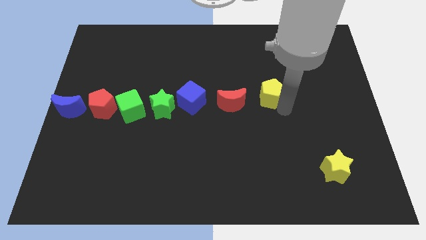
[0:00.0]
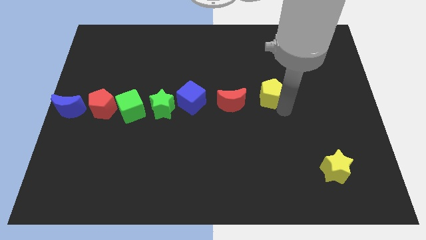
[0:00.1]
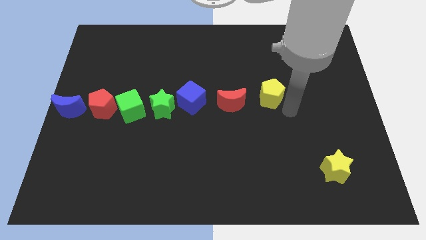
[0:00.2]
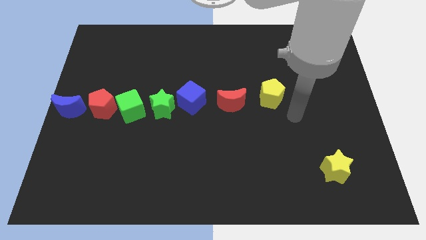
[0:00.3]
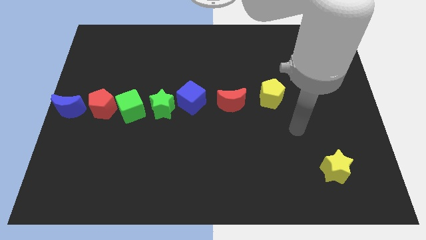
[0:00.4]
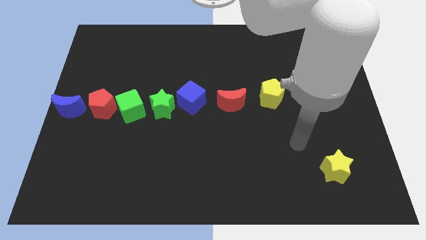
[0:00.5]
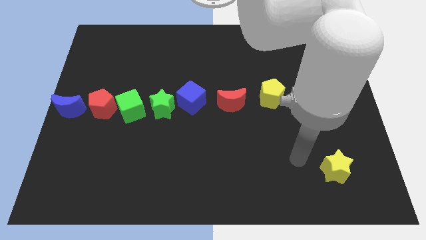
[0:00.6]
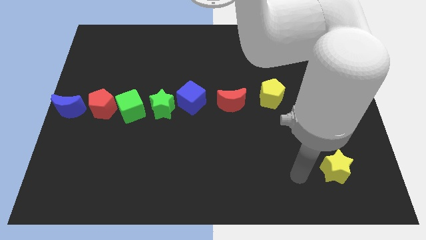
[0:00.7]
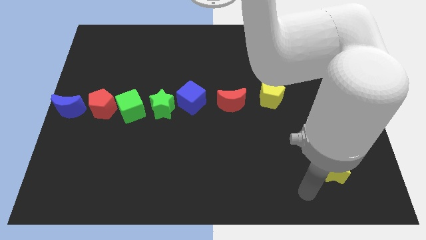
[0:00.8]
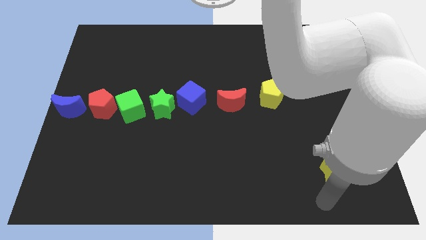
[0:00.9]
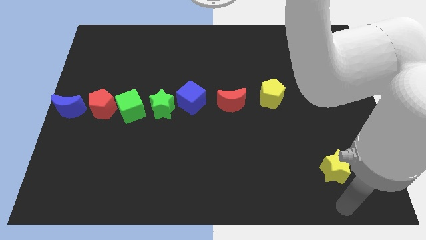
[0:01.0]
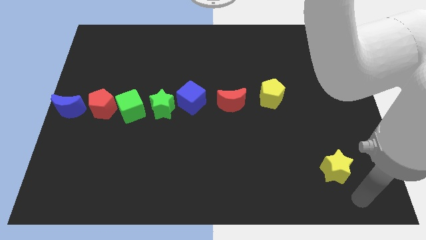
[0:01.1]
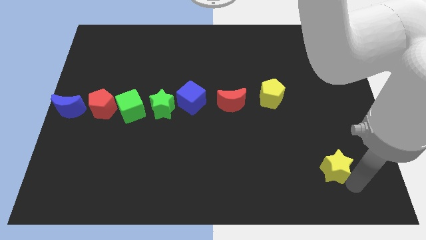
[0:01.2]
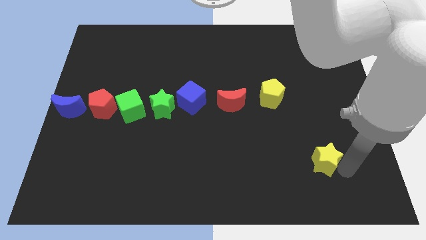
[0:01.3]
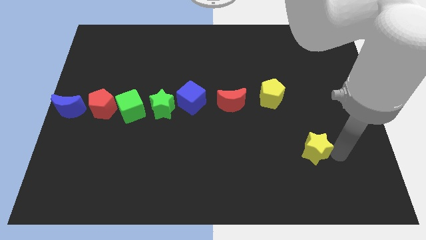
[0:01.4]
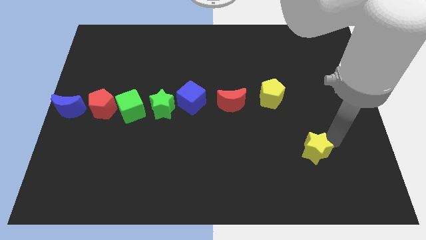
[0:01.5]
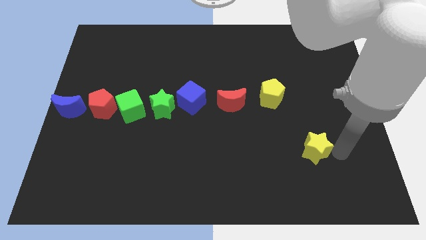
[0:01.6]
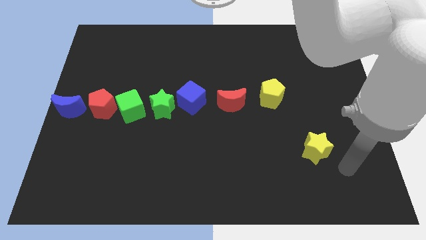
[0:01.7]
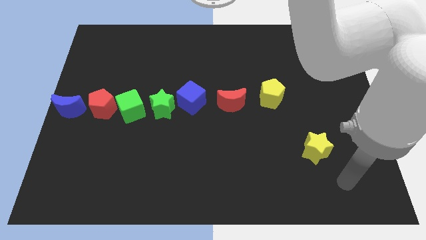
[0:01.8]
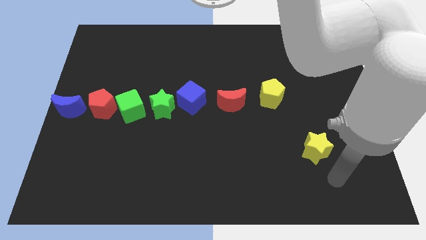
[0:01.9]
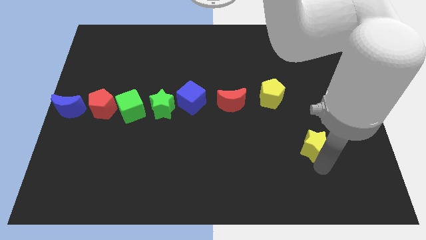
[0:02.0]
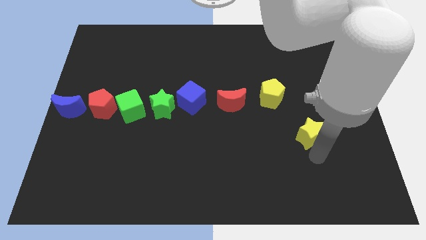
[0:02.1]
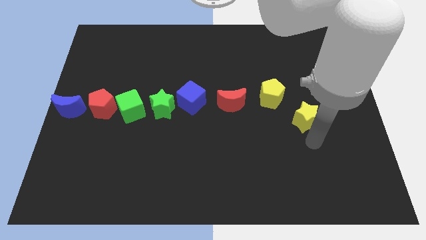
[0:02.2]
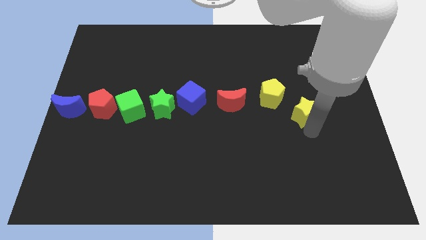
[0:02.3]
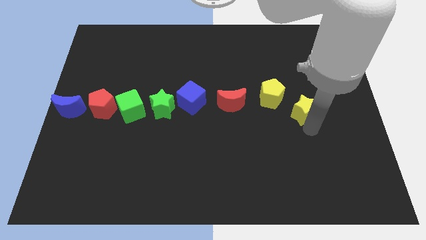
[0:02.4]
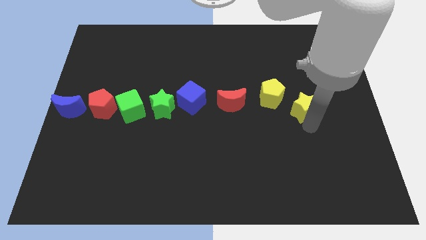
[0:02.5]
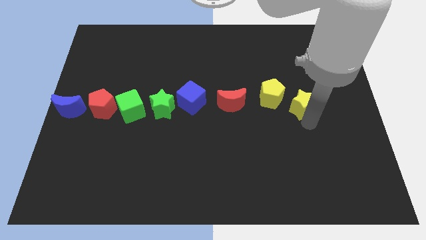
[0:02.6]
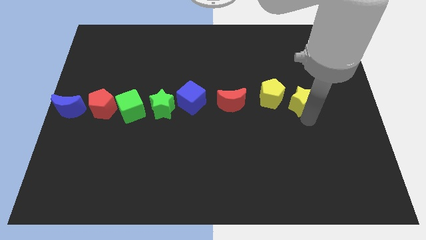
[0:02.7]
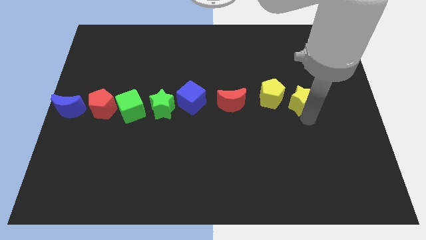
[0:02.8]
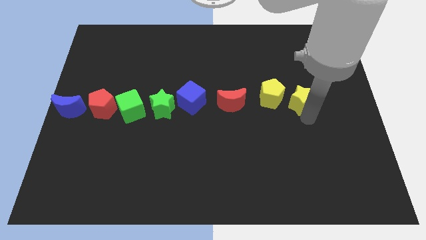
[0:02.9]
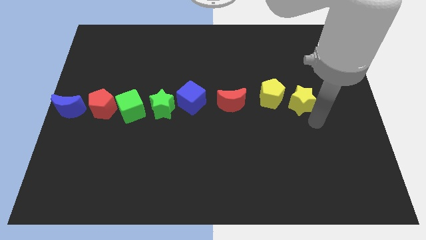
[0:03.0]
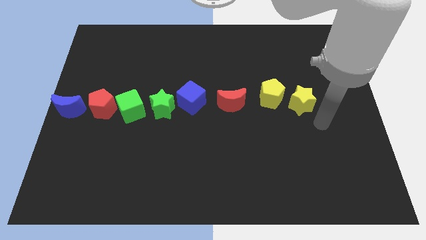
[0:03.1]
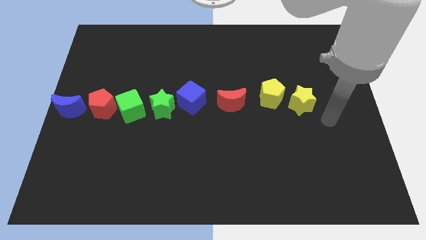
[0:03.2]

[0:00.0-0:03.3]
place the yellow star at the right side of the yellow pentagon

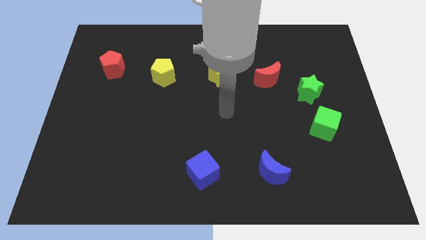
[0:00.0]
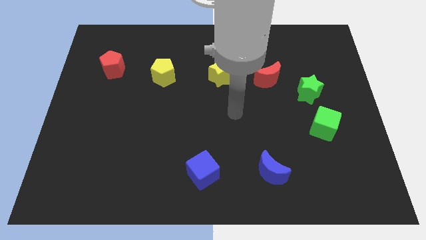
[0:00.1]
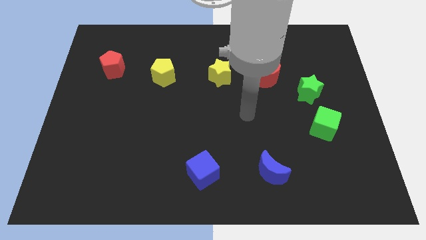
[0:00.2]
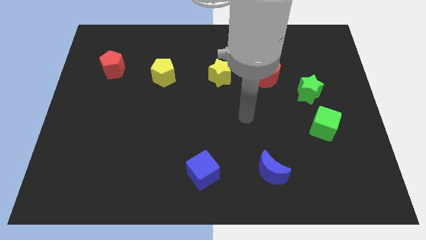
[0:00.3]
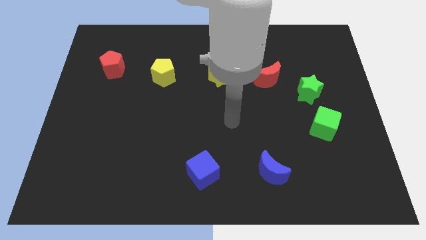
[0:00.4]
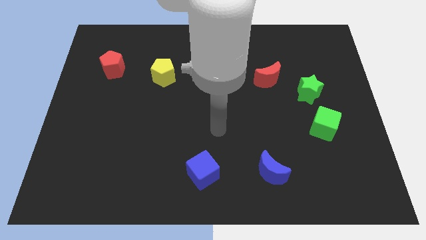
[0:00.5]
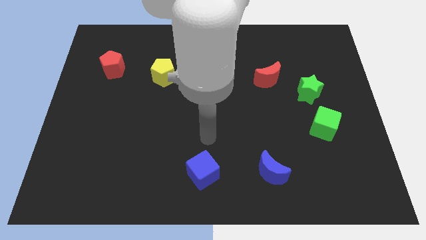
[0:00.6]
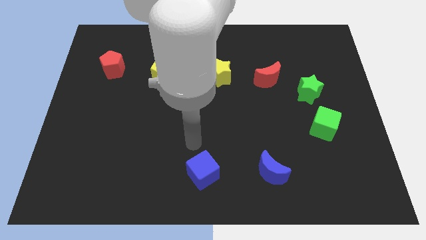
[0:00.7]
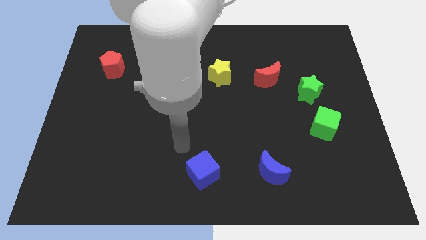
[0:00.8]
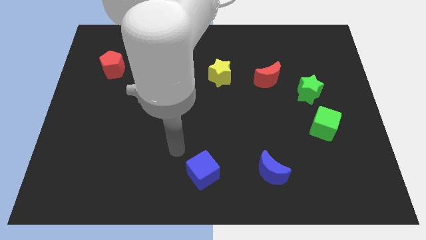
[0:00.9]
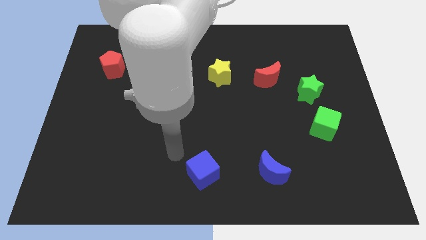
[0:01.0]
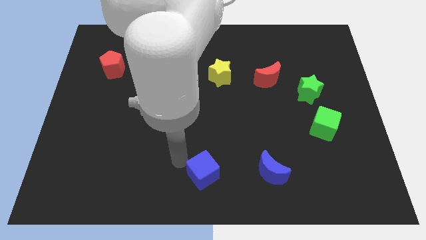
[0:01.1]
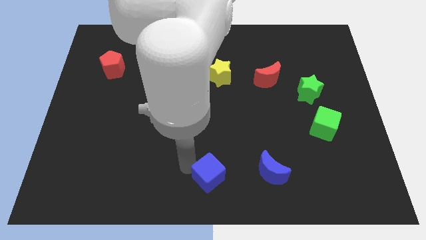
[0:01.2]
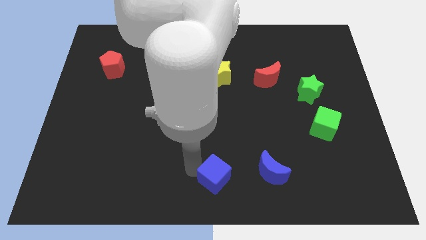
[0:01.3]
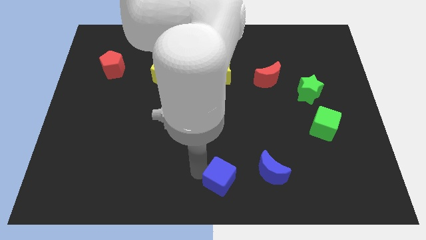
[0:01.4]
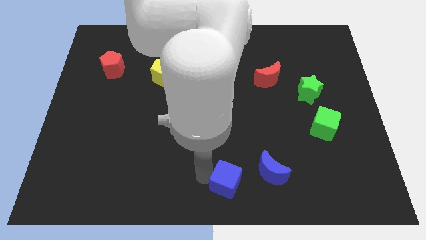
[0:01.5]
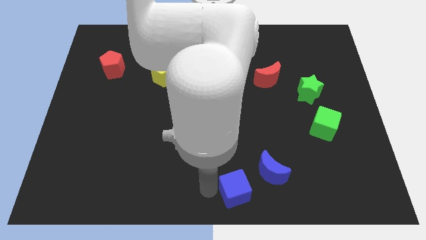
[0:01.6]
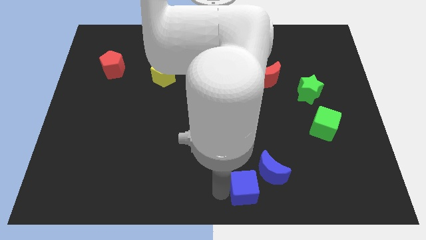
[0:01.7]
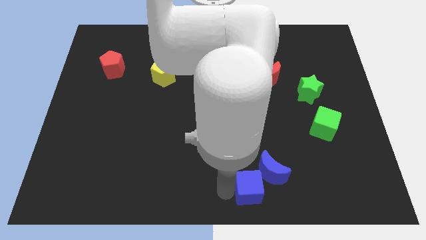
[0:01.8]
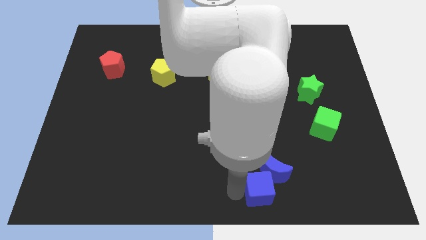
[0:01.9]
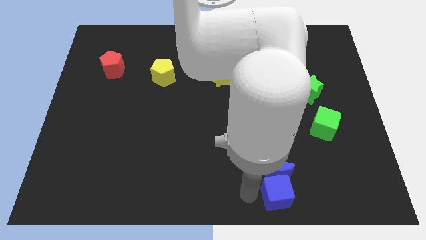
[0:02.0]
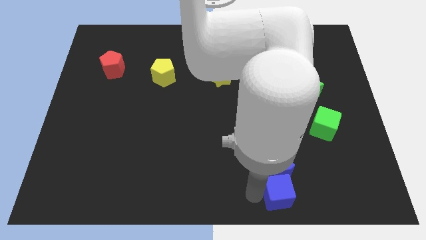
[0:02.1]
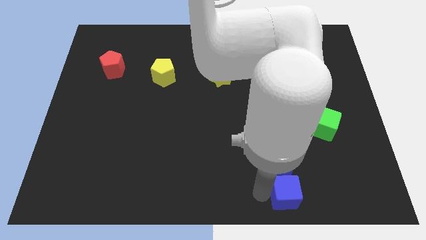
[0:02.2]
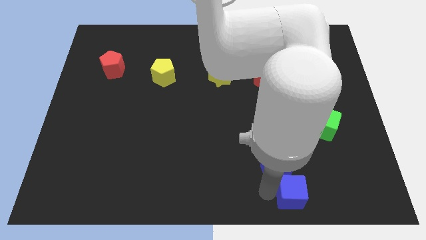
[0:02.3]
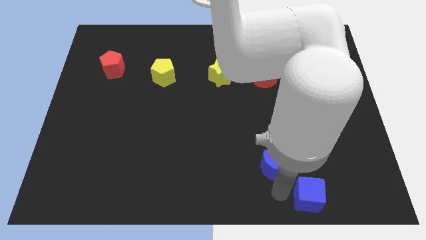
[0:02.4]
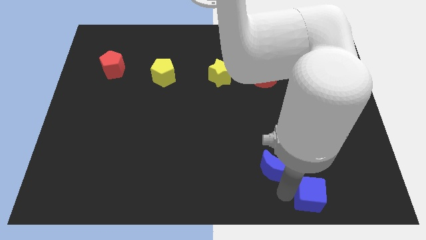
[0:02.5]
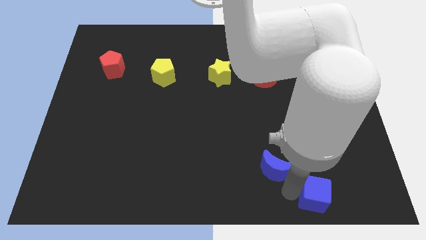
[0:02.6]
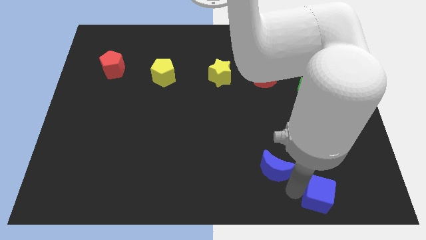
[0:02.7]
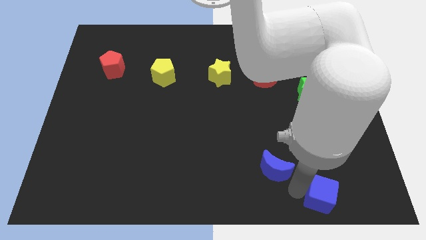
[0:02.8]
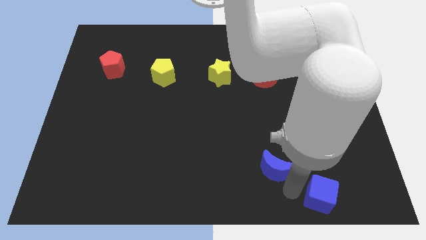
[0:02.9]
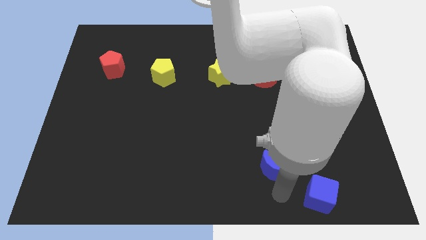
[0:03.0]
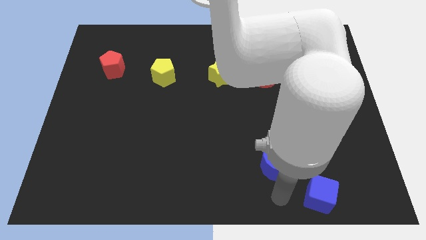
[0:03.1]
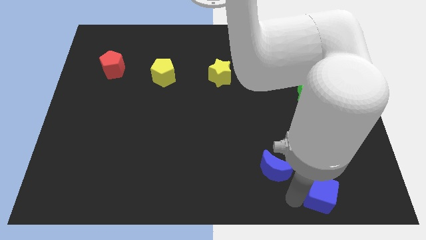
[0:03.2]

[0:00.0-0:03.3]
push the blue cube diagonally right below the blue moon

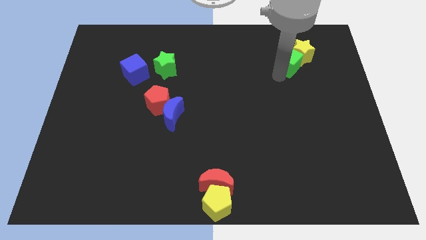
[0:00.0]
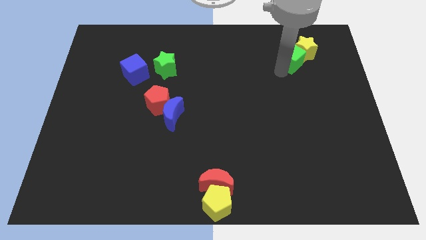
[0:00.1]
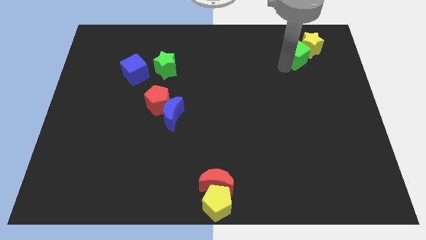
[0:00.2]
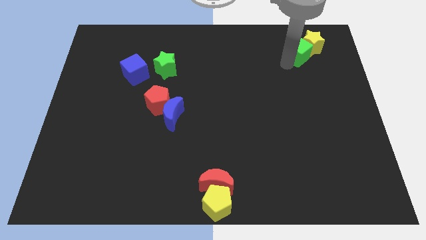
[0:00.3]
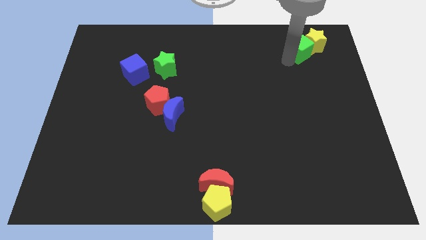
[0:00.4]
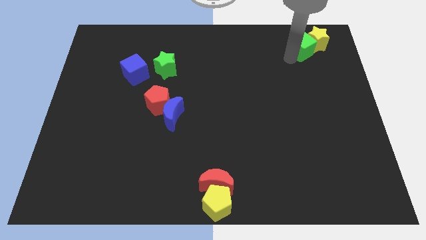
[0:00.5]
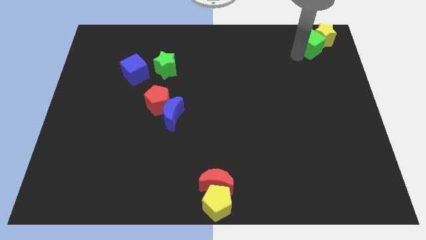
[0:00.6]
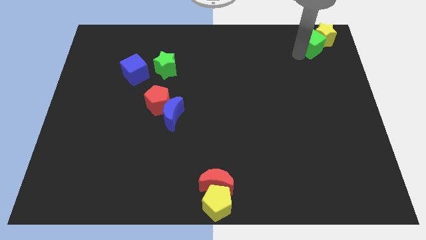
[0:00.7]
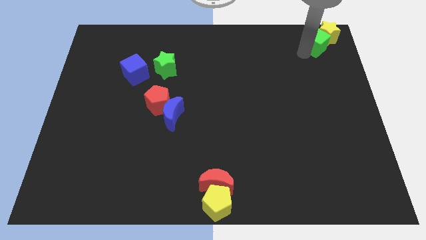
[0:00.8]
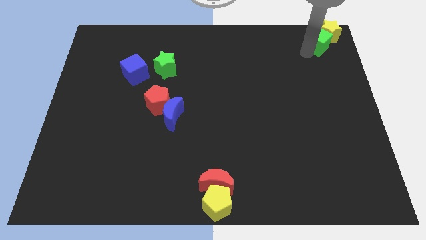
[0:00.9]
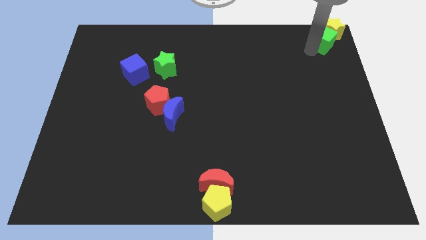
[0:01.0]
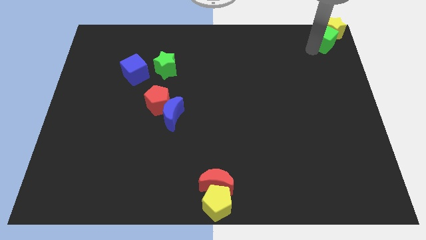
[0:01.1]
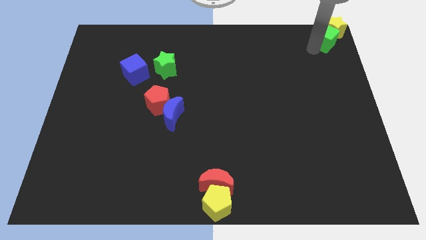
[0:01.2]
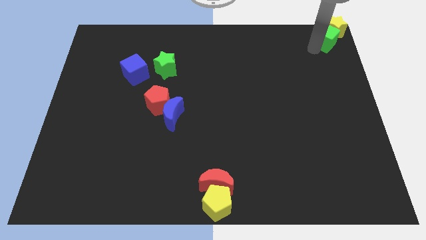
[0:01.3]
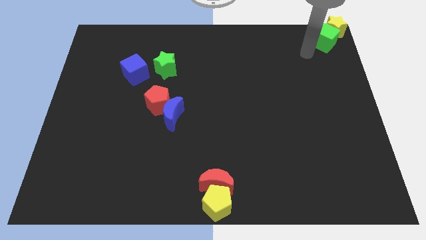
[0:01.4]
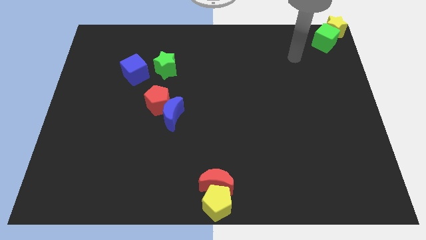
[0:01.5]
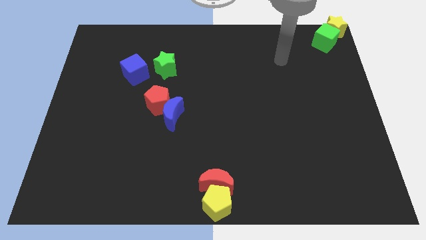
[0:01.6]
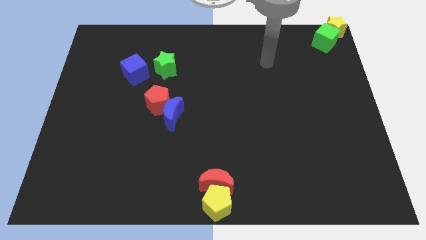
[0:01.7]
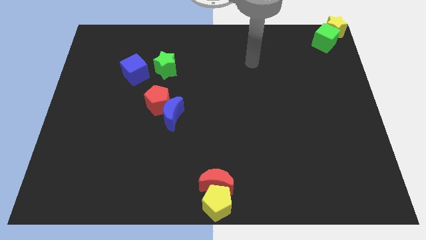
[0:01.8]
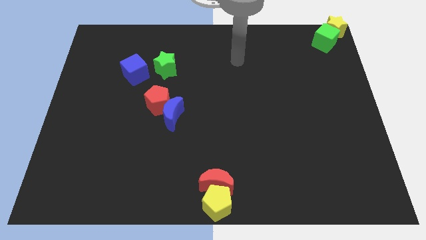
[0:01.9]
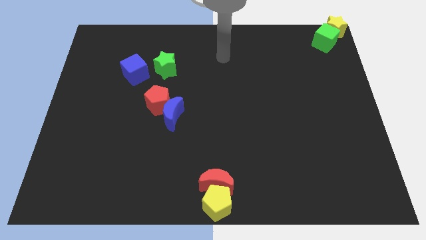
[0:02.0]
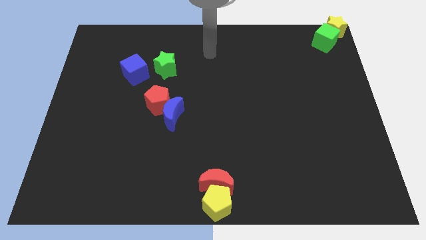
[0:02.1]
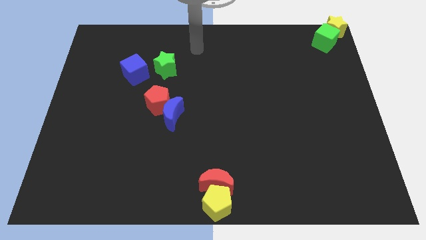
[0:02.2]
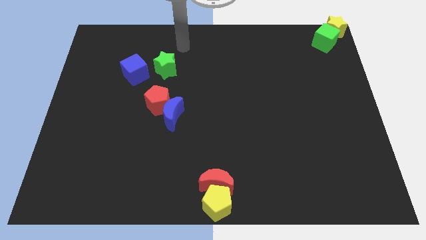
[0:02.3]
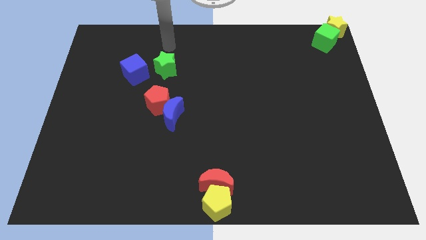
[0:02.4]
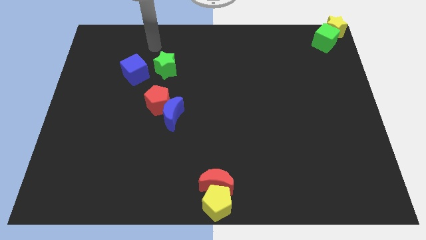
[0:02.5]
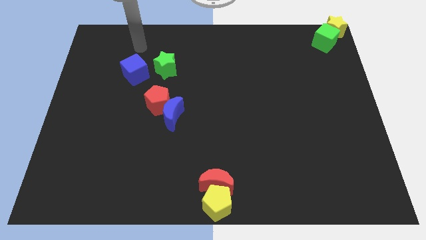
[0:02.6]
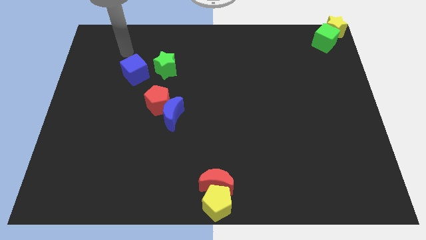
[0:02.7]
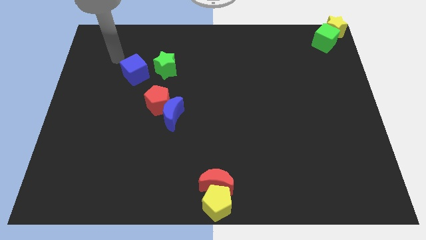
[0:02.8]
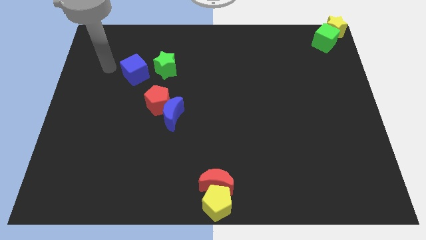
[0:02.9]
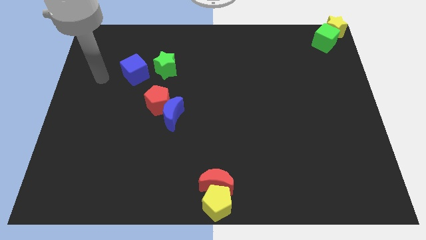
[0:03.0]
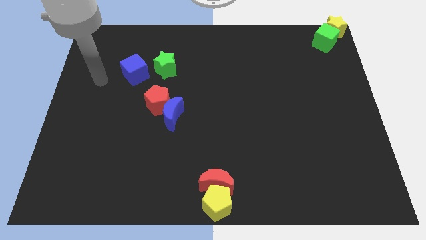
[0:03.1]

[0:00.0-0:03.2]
slightly push the green cube and yellow star to the top right corner
